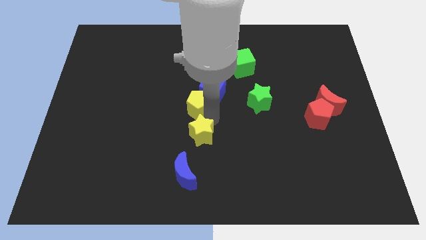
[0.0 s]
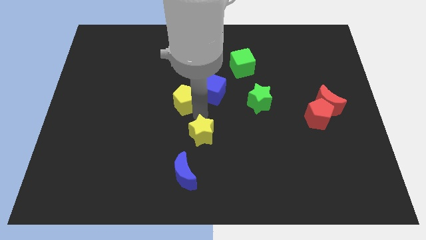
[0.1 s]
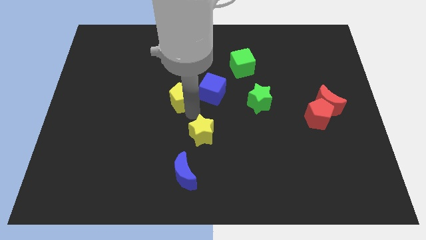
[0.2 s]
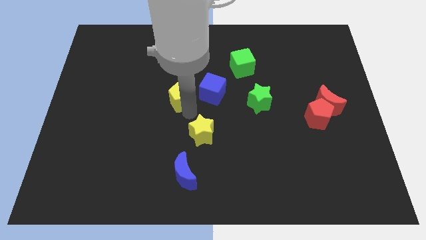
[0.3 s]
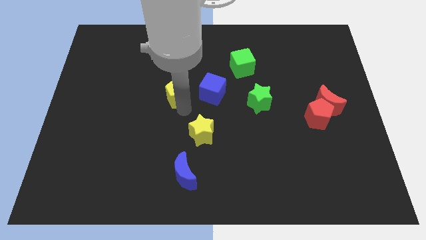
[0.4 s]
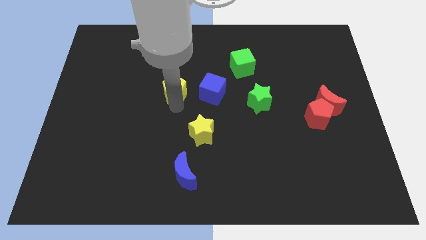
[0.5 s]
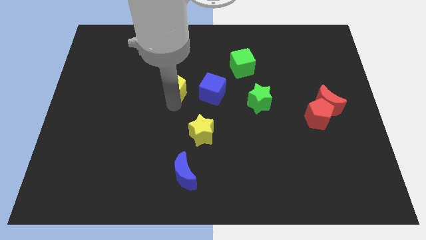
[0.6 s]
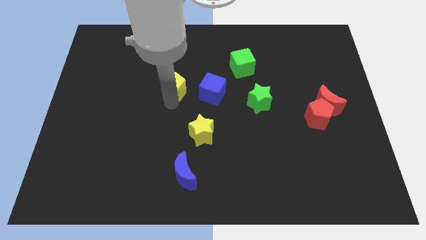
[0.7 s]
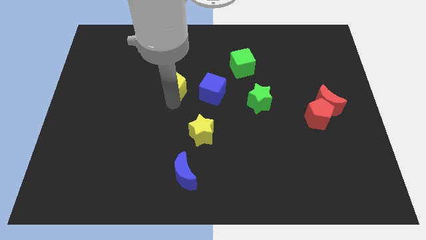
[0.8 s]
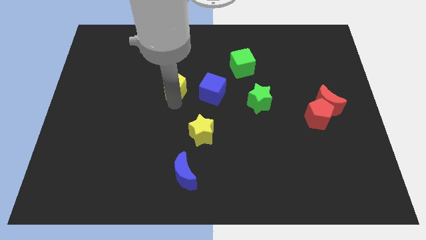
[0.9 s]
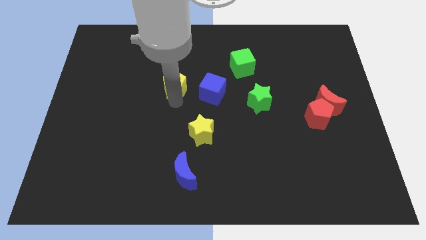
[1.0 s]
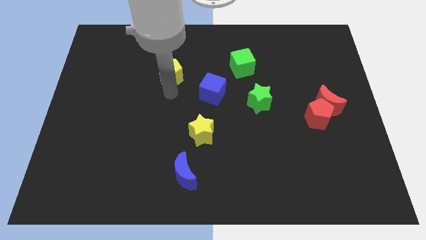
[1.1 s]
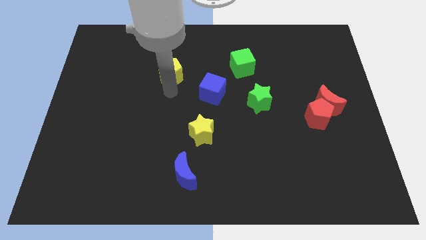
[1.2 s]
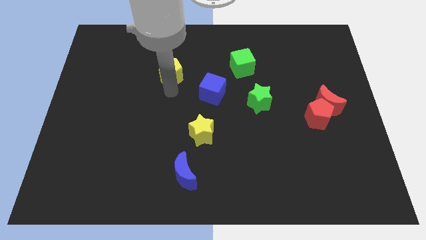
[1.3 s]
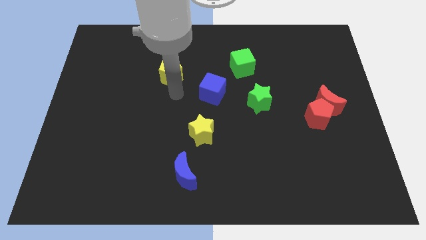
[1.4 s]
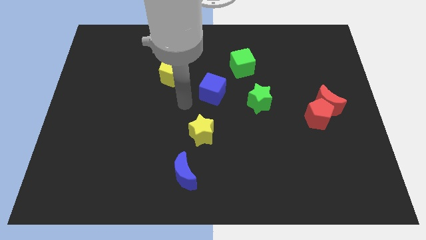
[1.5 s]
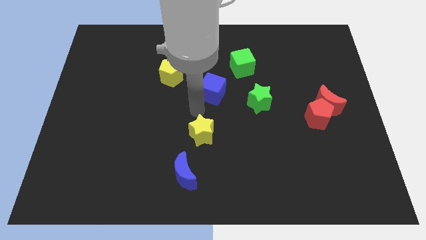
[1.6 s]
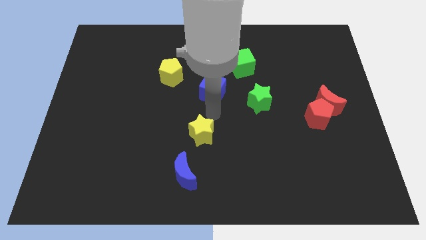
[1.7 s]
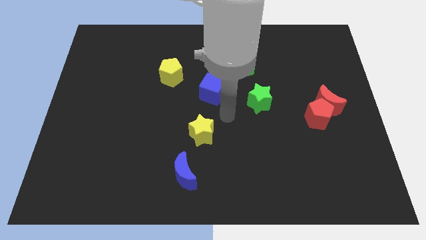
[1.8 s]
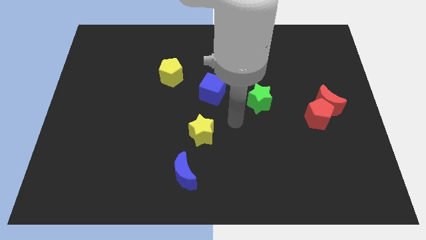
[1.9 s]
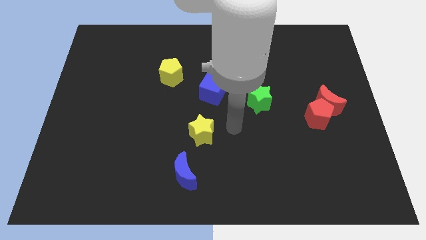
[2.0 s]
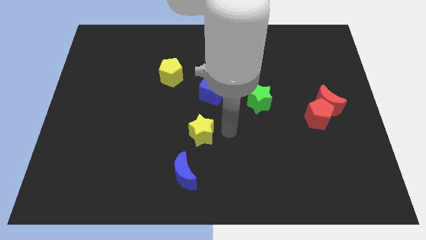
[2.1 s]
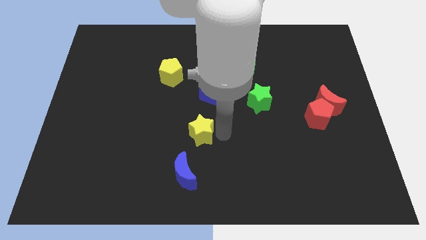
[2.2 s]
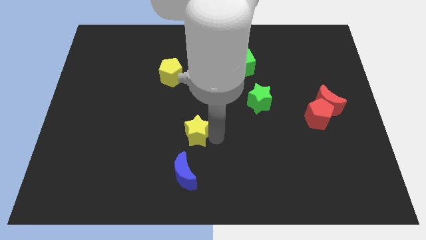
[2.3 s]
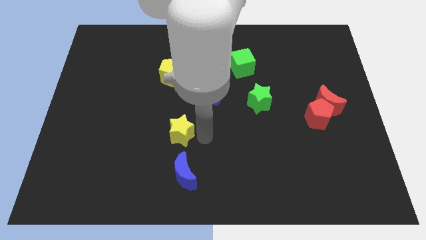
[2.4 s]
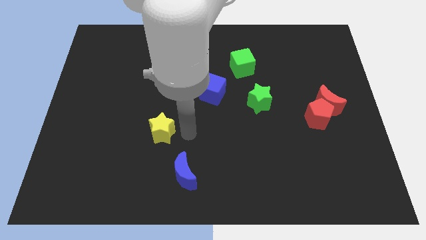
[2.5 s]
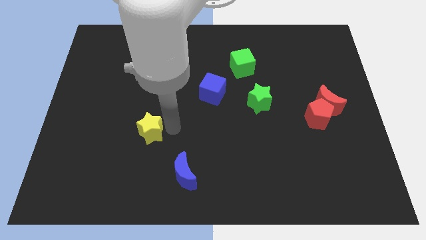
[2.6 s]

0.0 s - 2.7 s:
place yellow star vertical to yellow pentagon

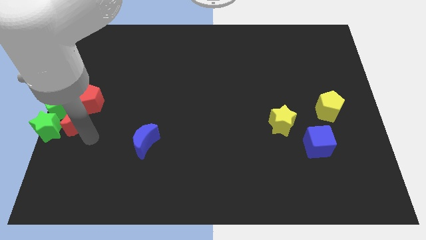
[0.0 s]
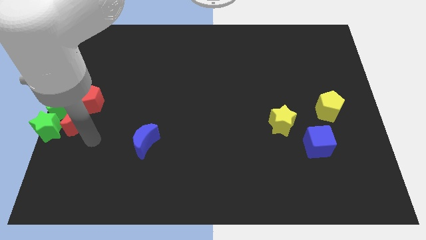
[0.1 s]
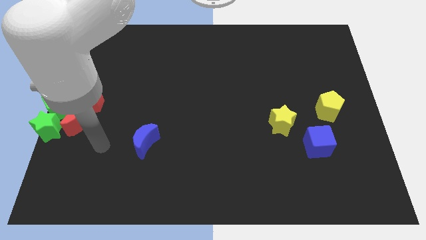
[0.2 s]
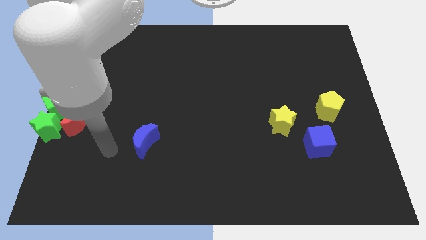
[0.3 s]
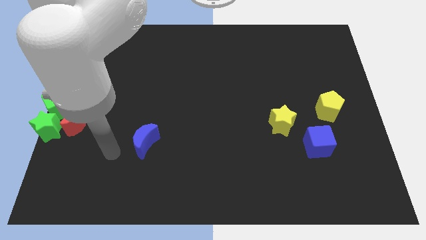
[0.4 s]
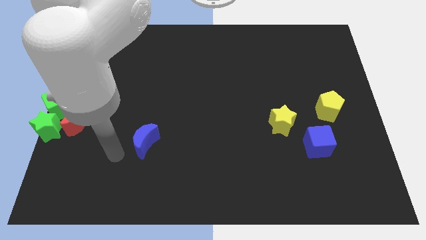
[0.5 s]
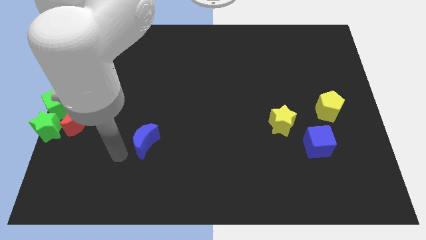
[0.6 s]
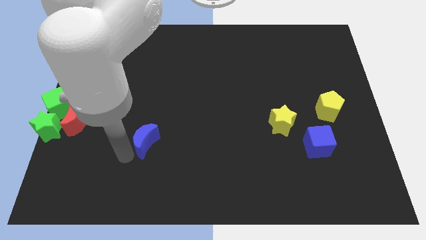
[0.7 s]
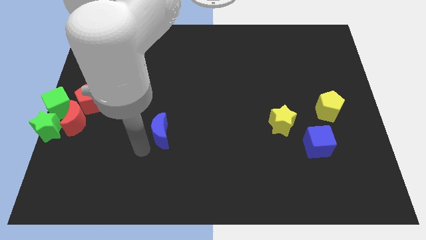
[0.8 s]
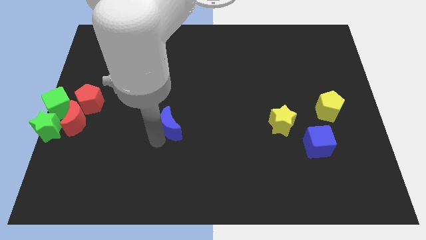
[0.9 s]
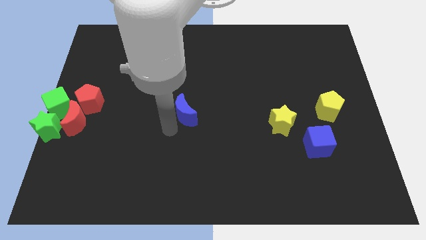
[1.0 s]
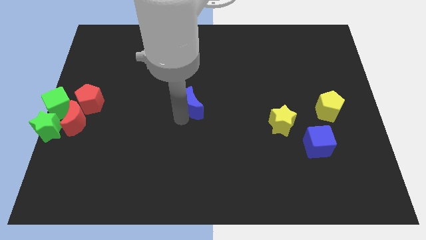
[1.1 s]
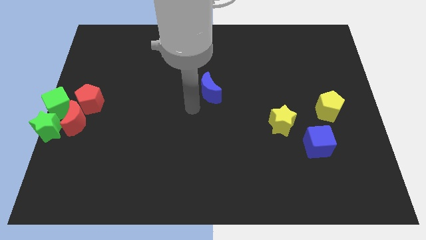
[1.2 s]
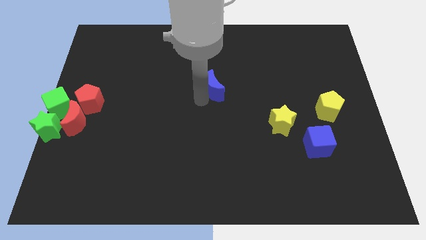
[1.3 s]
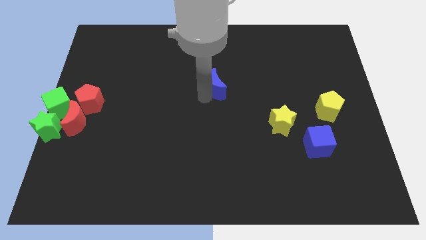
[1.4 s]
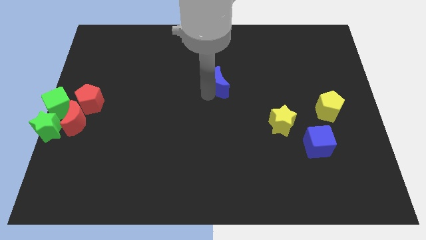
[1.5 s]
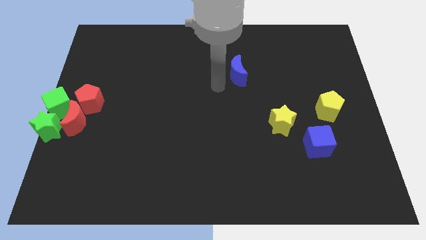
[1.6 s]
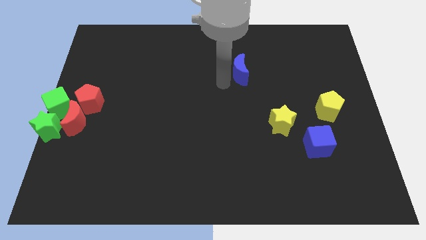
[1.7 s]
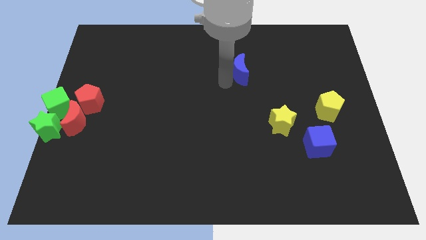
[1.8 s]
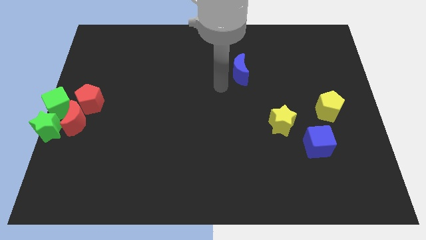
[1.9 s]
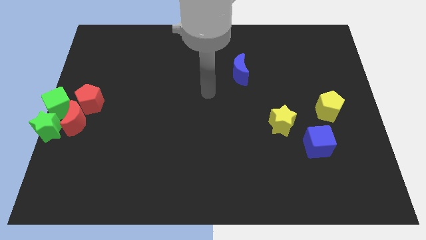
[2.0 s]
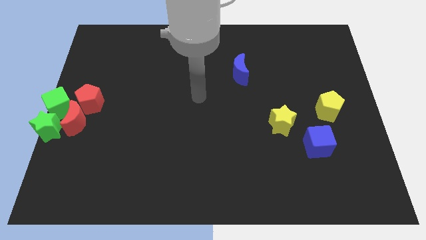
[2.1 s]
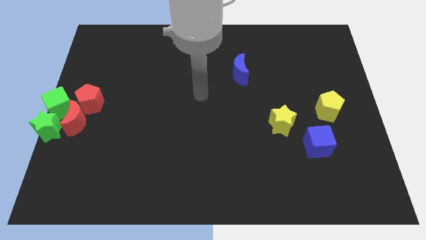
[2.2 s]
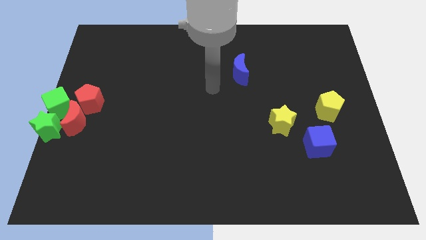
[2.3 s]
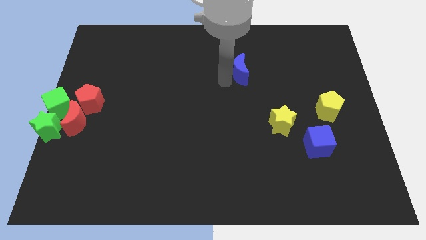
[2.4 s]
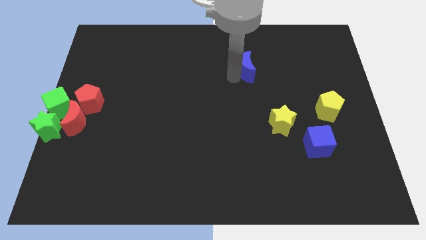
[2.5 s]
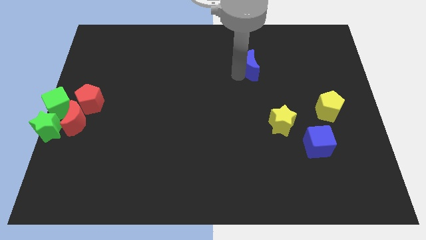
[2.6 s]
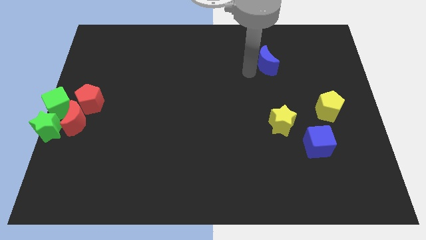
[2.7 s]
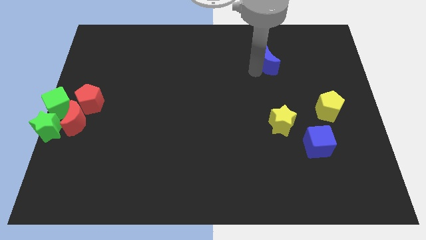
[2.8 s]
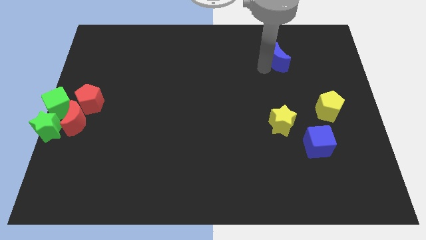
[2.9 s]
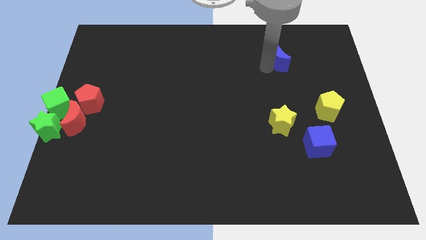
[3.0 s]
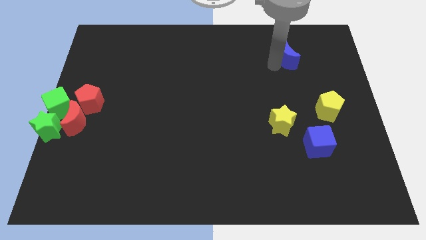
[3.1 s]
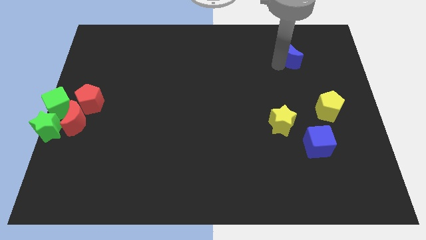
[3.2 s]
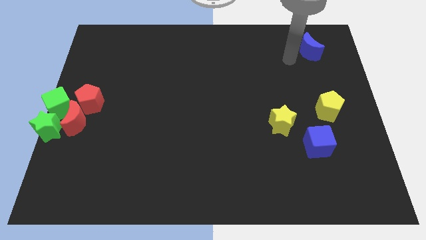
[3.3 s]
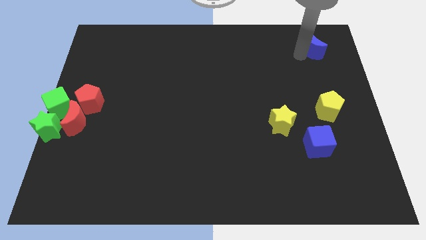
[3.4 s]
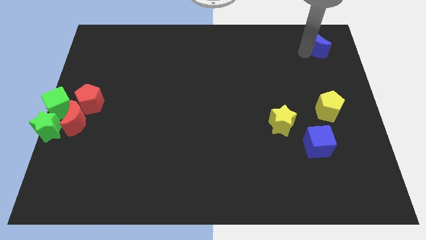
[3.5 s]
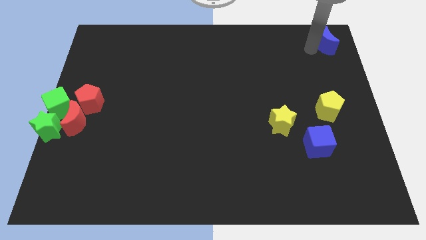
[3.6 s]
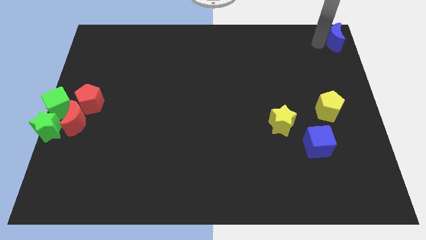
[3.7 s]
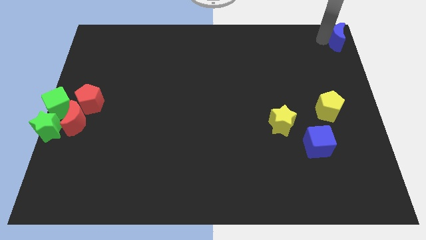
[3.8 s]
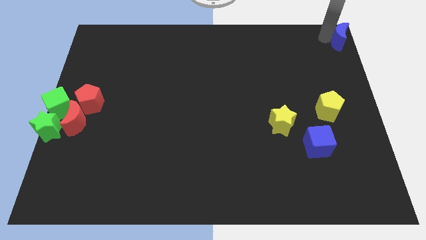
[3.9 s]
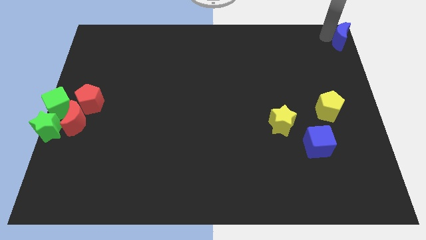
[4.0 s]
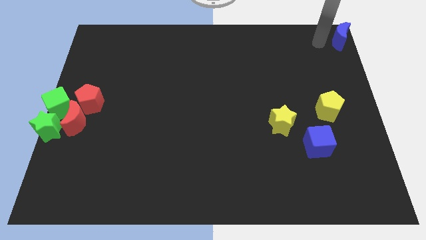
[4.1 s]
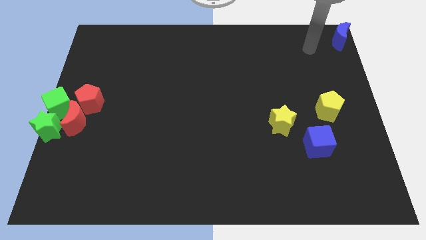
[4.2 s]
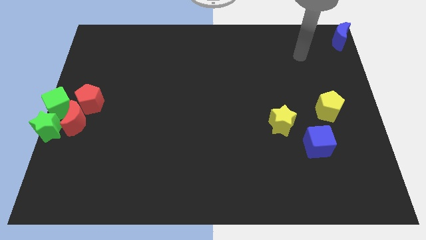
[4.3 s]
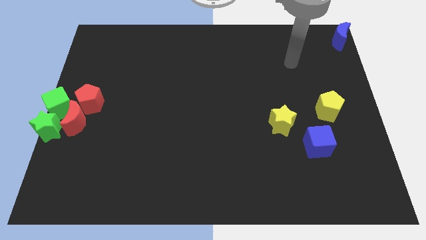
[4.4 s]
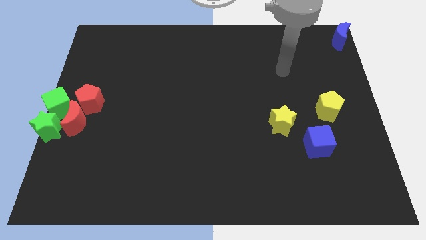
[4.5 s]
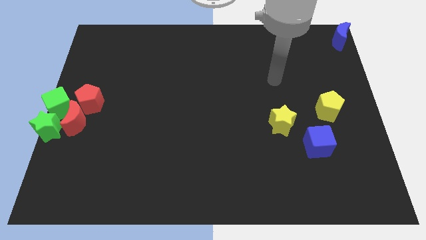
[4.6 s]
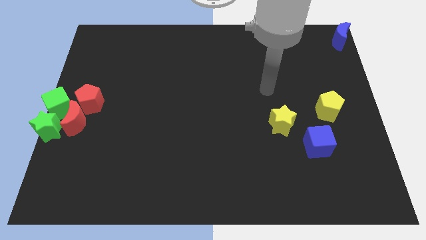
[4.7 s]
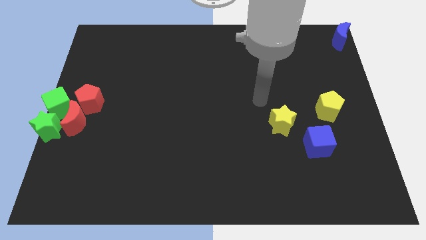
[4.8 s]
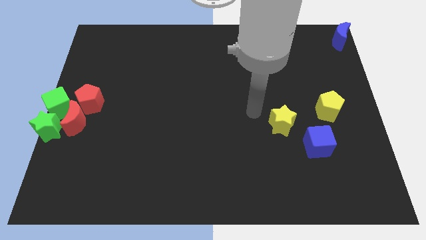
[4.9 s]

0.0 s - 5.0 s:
push the blue crescent to the top right of the board

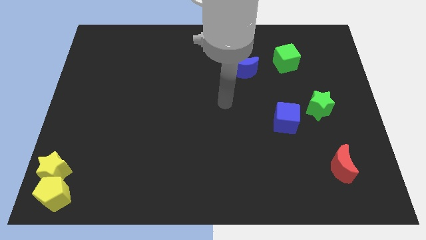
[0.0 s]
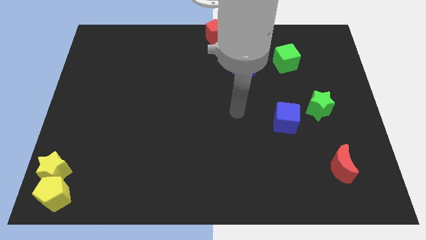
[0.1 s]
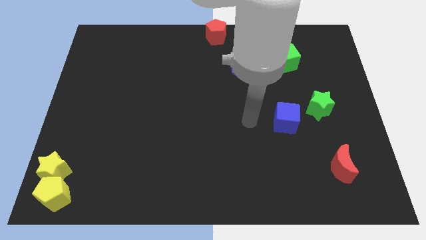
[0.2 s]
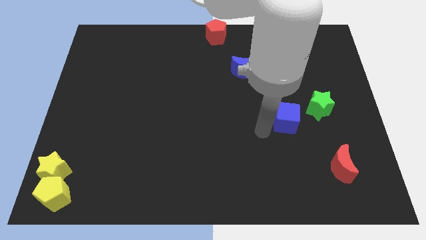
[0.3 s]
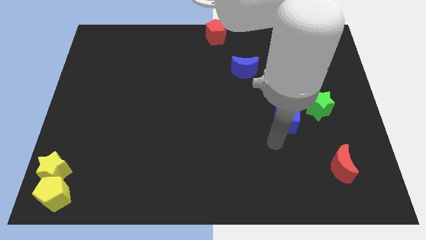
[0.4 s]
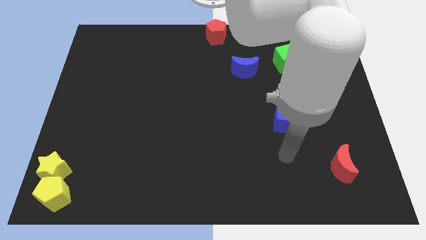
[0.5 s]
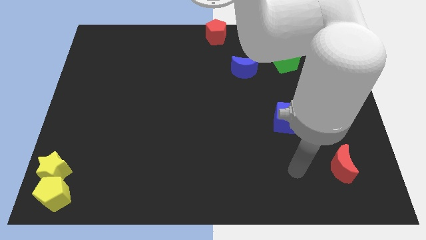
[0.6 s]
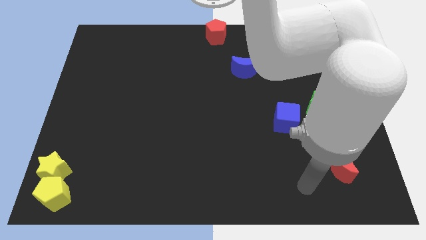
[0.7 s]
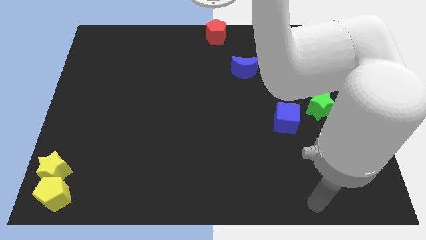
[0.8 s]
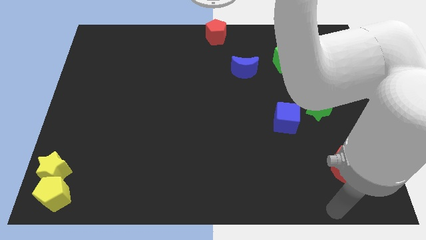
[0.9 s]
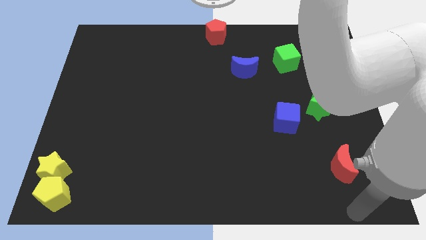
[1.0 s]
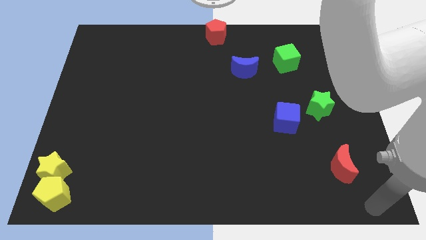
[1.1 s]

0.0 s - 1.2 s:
place your hand at the bottom right corner

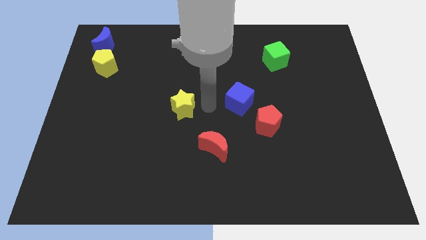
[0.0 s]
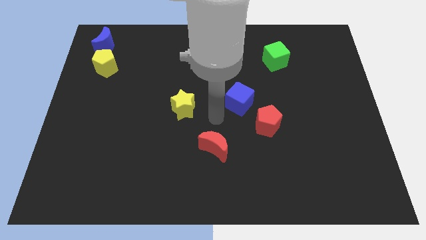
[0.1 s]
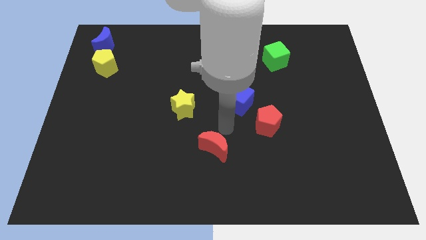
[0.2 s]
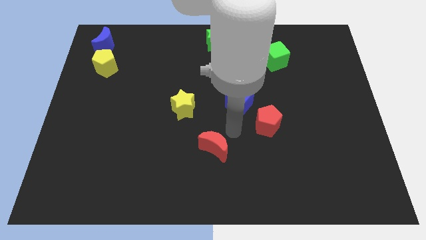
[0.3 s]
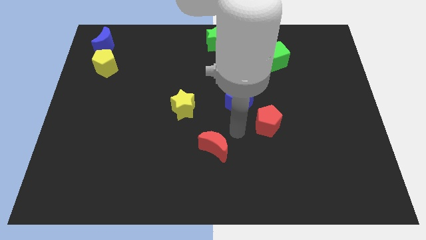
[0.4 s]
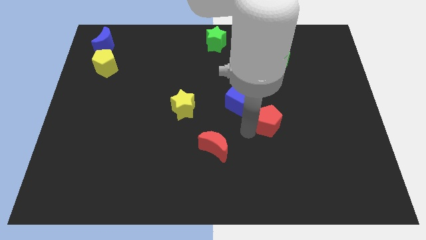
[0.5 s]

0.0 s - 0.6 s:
point your arm to the left side of red pentagon
